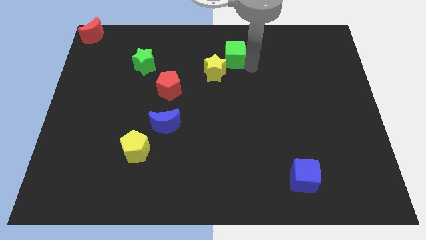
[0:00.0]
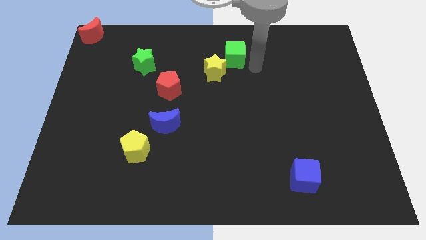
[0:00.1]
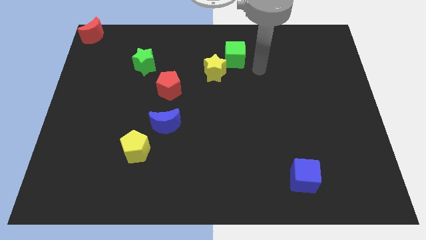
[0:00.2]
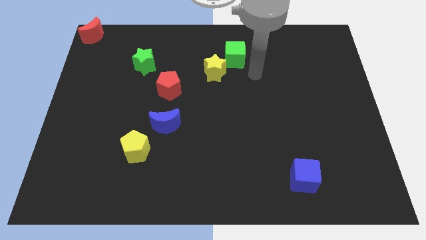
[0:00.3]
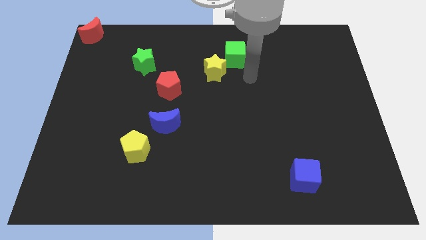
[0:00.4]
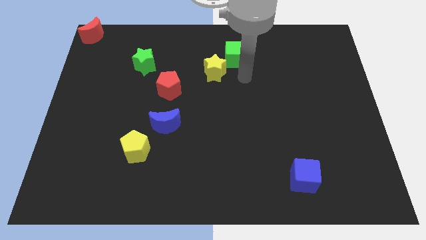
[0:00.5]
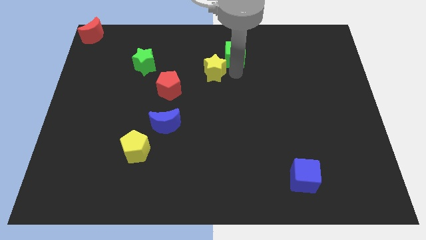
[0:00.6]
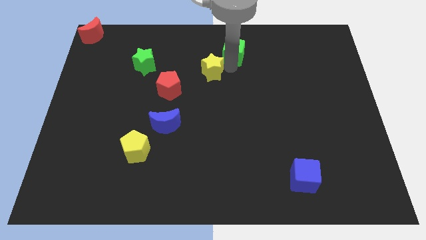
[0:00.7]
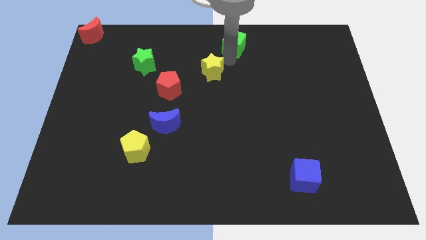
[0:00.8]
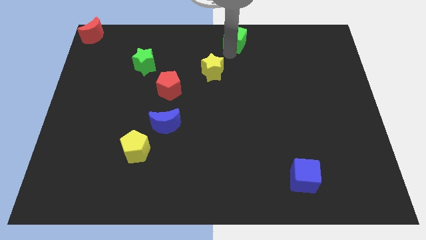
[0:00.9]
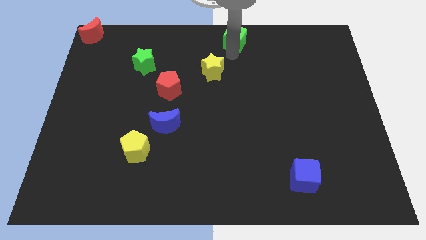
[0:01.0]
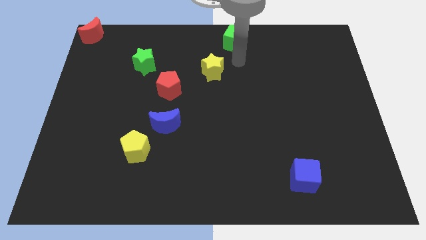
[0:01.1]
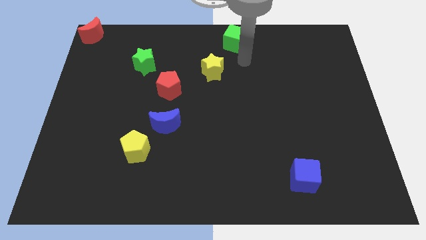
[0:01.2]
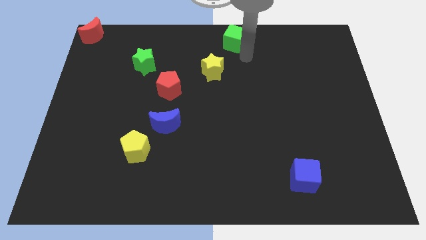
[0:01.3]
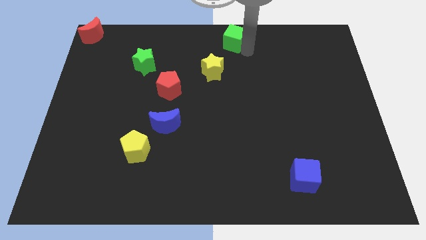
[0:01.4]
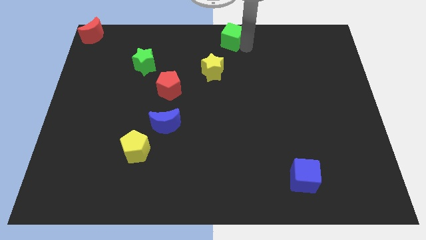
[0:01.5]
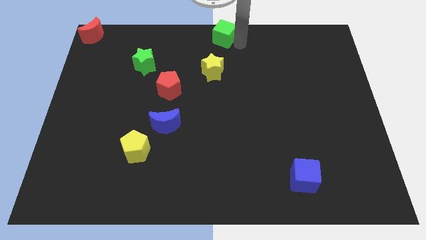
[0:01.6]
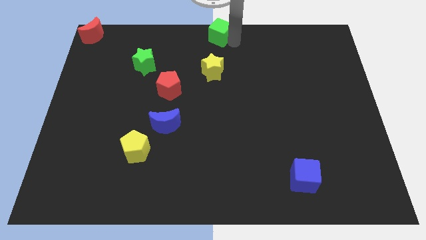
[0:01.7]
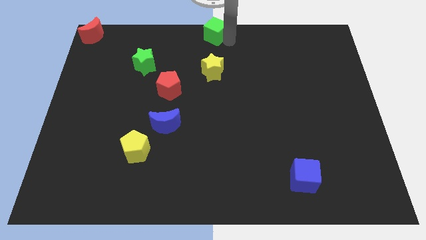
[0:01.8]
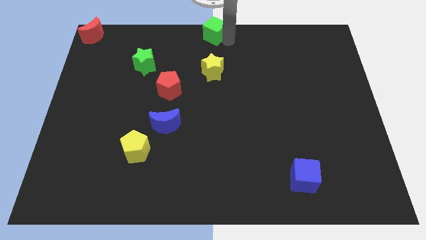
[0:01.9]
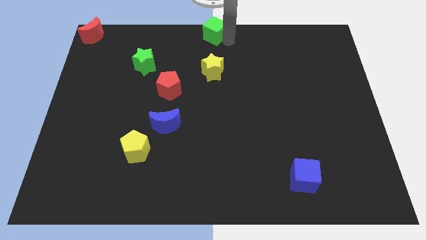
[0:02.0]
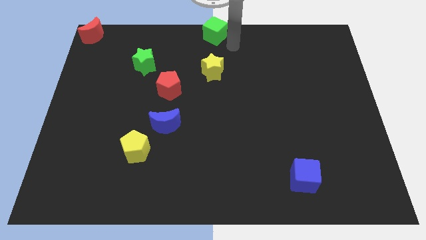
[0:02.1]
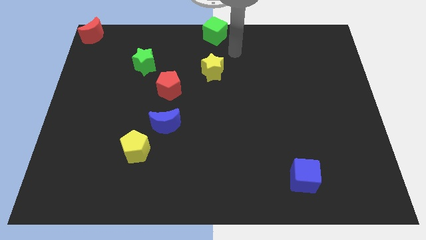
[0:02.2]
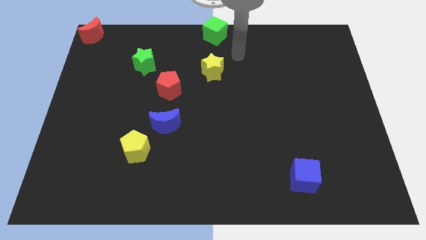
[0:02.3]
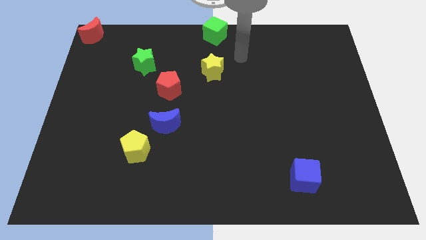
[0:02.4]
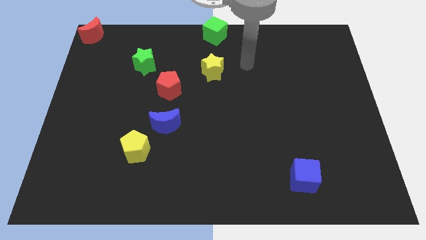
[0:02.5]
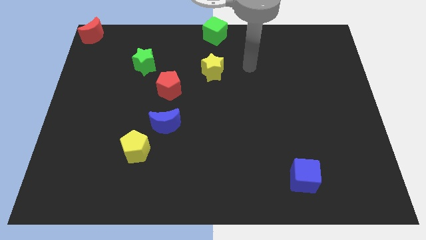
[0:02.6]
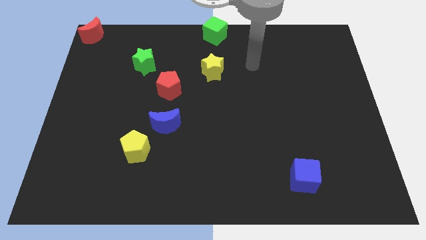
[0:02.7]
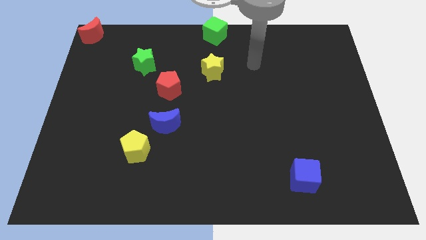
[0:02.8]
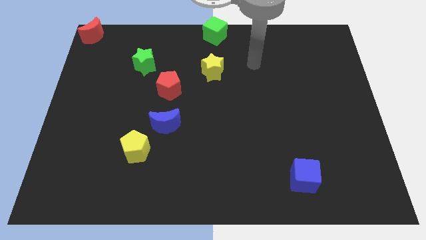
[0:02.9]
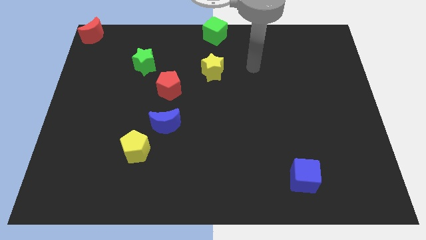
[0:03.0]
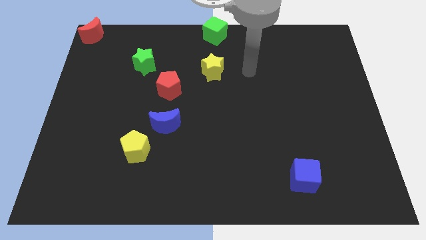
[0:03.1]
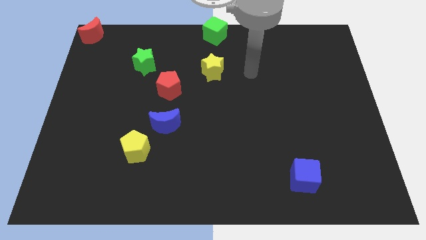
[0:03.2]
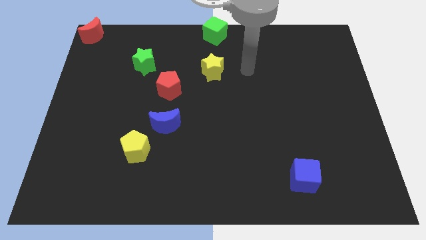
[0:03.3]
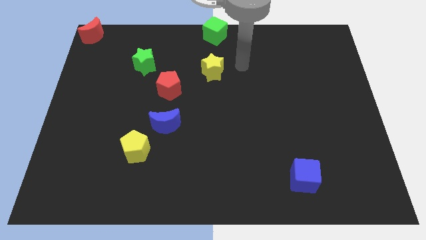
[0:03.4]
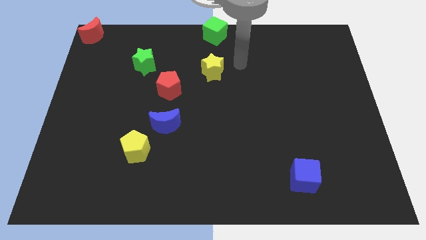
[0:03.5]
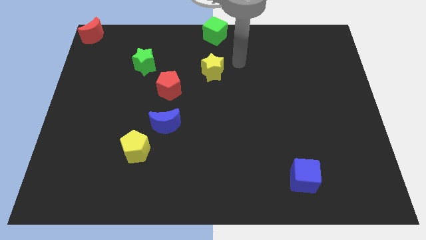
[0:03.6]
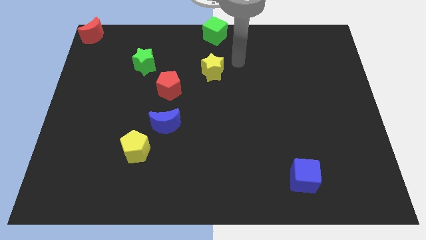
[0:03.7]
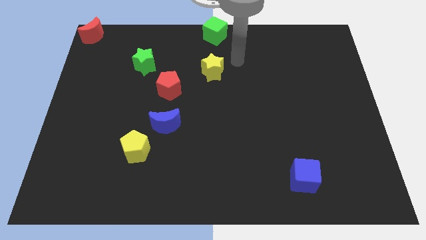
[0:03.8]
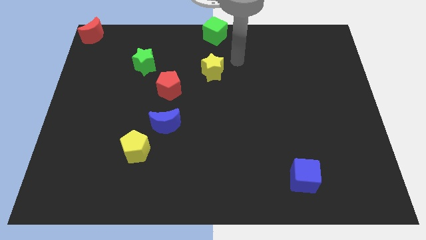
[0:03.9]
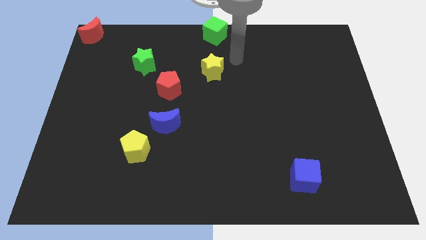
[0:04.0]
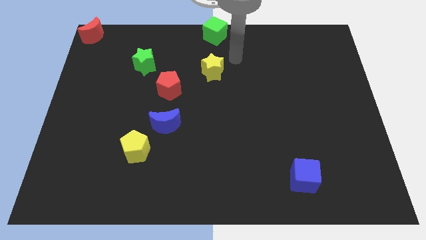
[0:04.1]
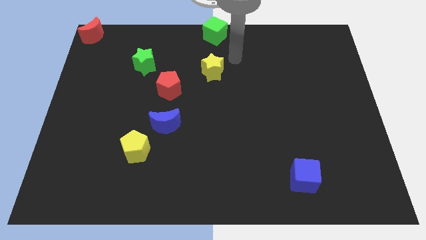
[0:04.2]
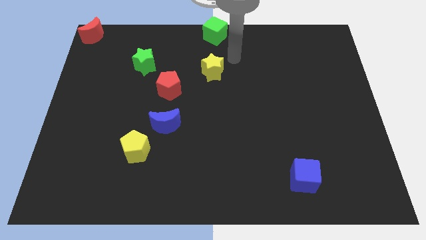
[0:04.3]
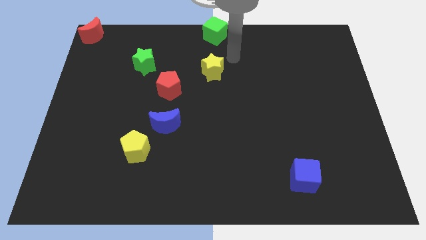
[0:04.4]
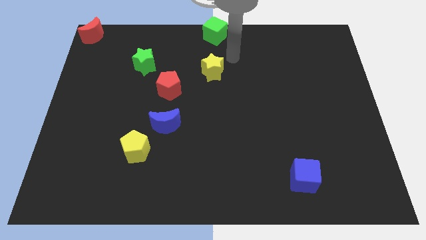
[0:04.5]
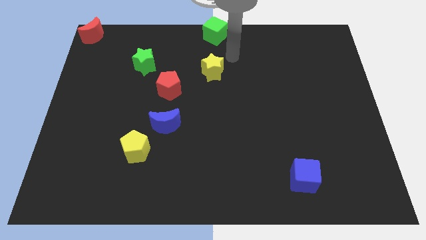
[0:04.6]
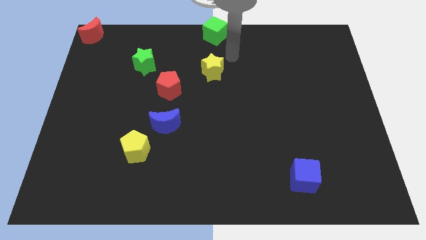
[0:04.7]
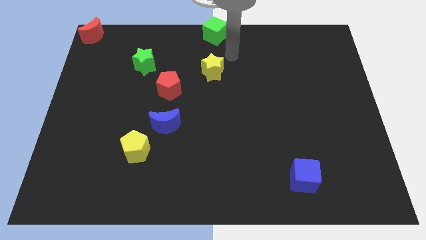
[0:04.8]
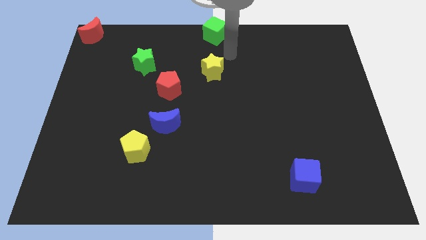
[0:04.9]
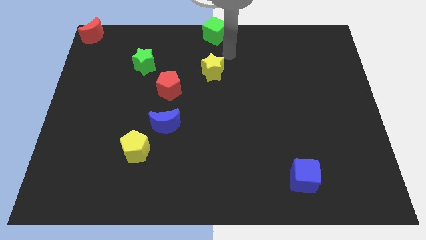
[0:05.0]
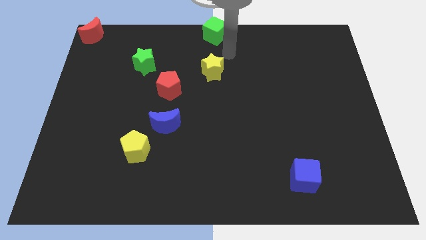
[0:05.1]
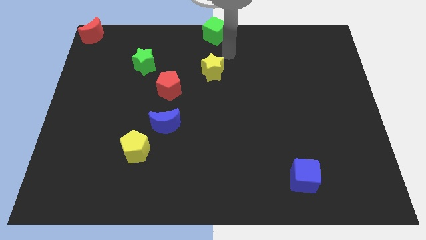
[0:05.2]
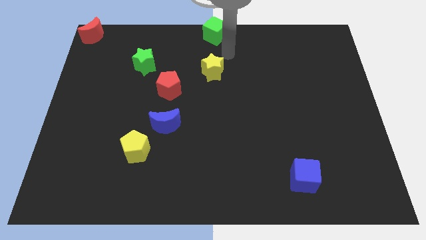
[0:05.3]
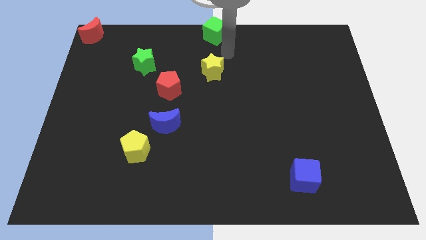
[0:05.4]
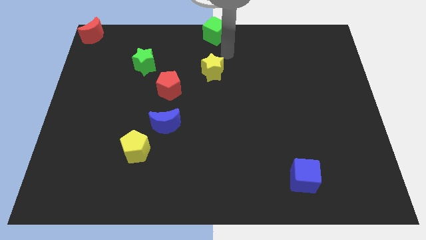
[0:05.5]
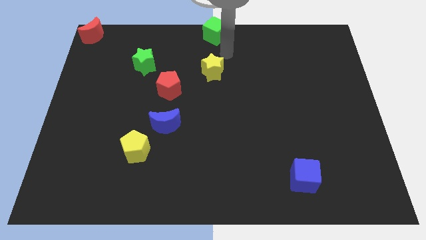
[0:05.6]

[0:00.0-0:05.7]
place the green cube vertically above the yellow star

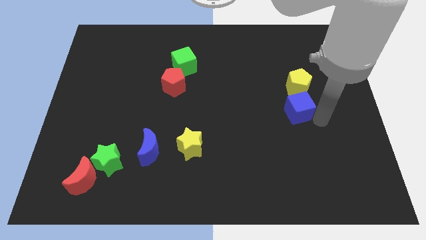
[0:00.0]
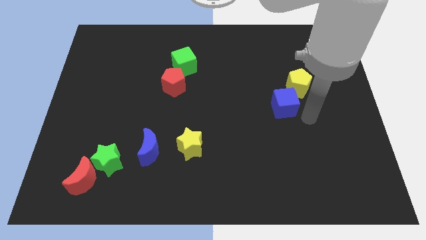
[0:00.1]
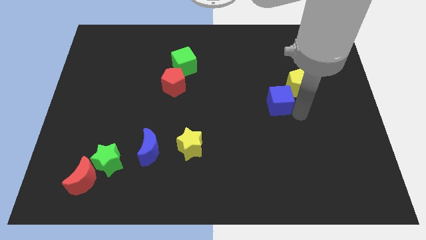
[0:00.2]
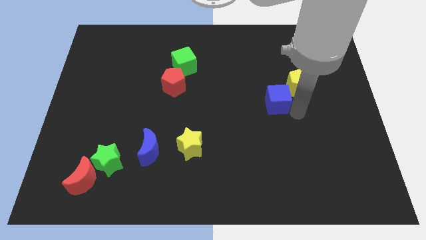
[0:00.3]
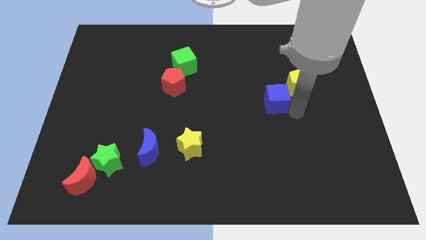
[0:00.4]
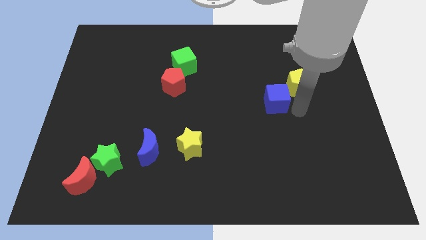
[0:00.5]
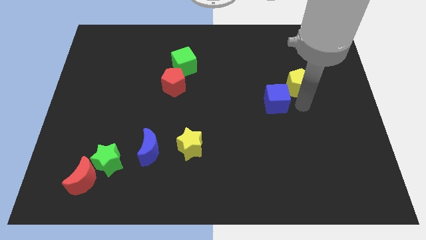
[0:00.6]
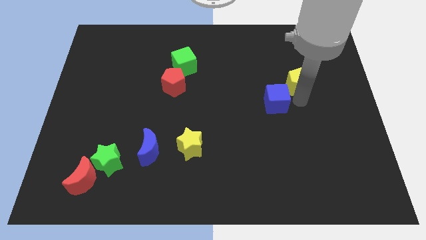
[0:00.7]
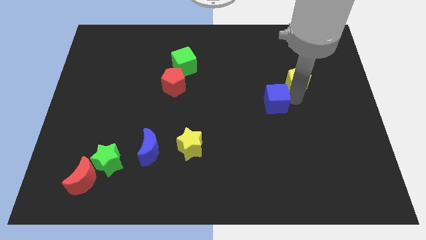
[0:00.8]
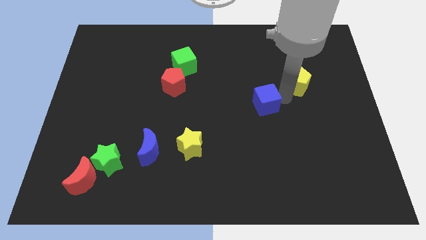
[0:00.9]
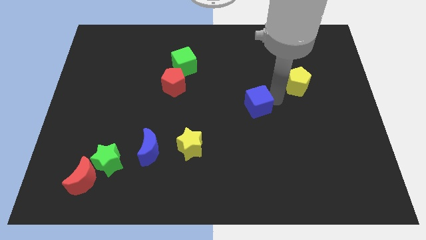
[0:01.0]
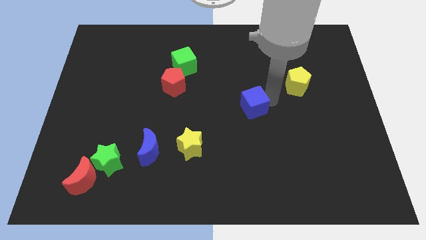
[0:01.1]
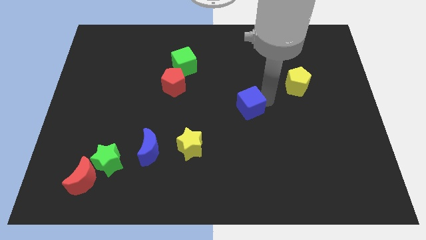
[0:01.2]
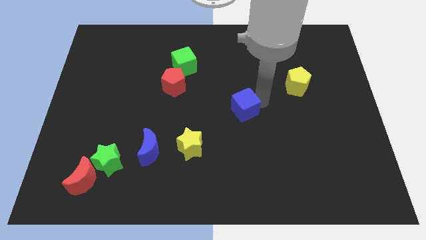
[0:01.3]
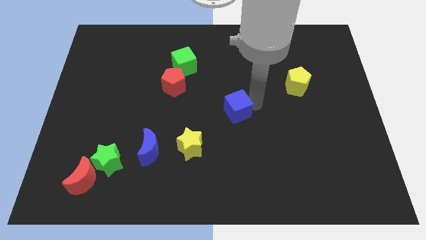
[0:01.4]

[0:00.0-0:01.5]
place the blue cube to the center of the board

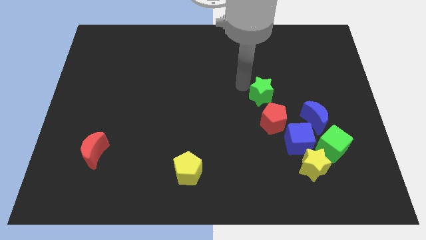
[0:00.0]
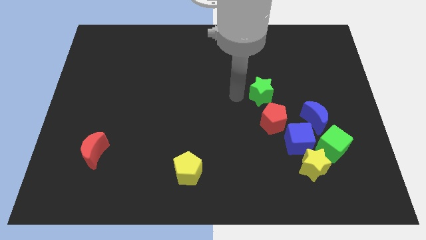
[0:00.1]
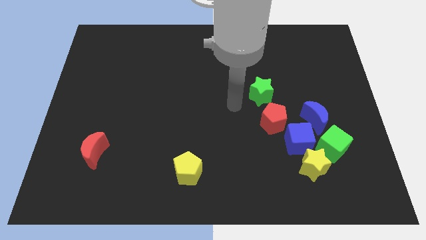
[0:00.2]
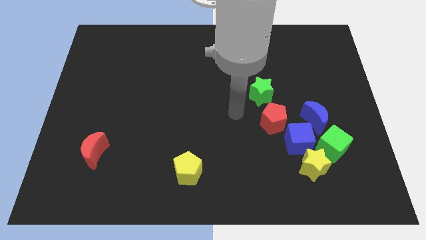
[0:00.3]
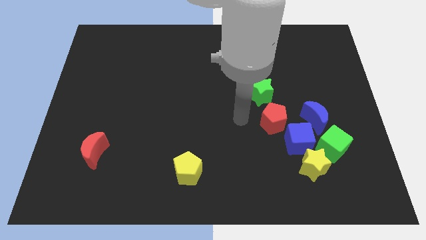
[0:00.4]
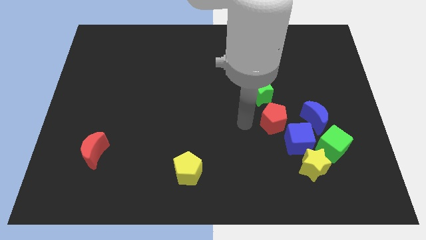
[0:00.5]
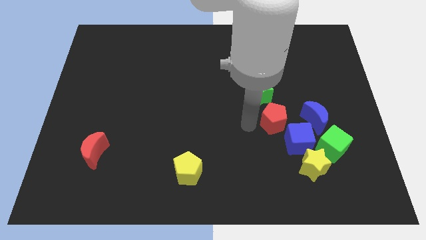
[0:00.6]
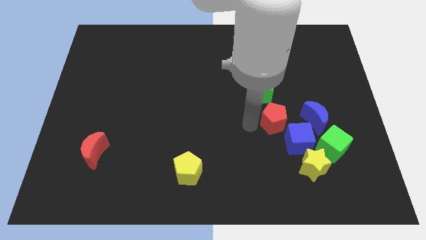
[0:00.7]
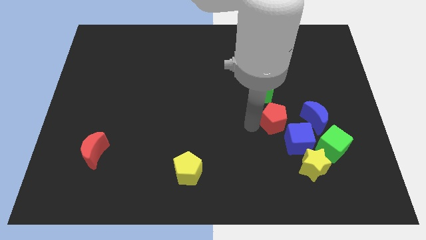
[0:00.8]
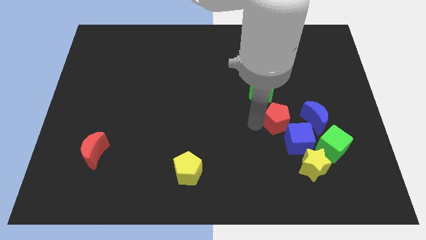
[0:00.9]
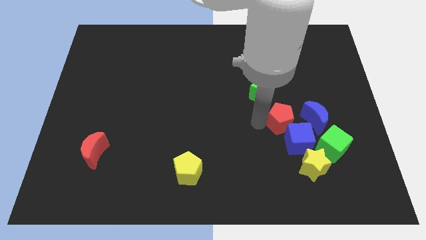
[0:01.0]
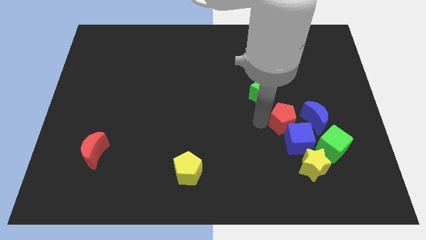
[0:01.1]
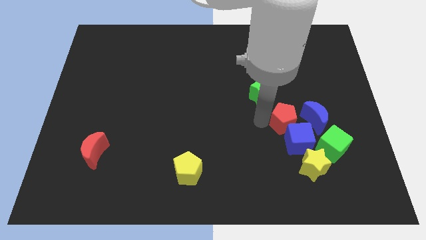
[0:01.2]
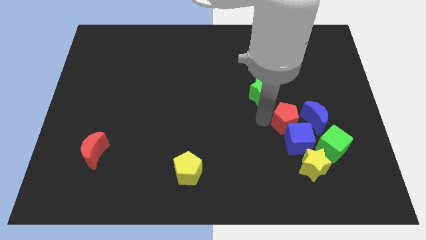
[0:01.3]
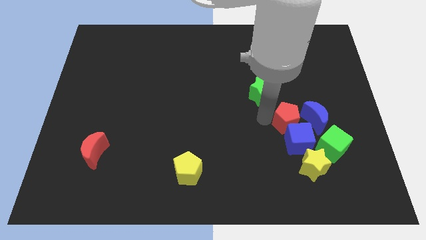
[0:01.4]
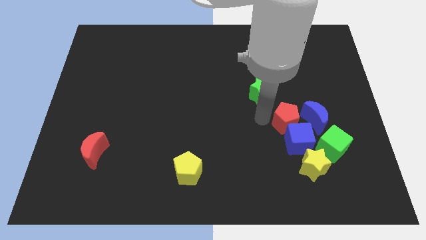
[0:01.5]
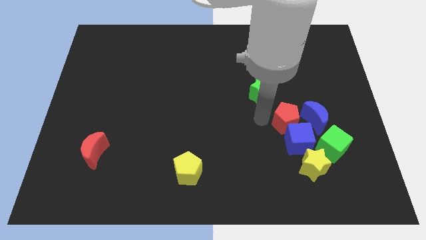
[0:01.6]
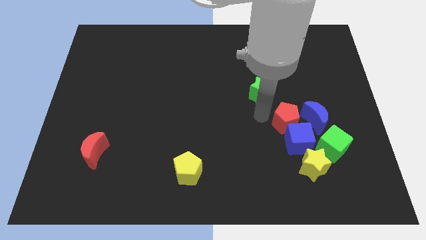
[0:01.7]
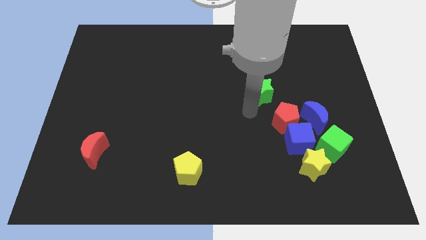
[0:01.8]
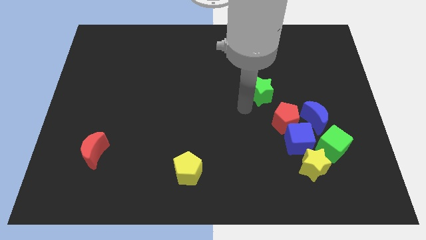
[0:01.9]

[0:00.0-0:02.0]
slide the red pentagon slightly to the right
